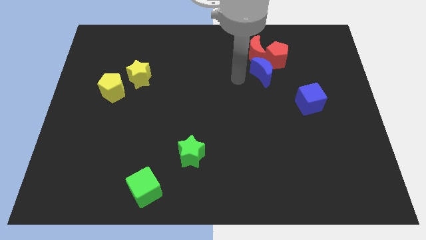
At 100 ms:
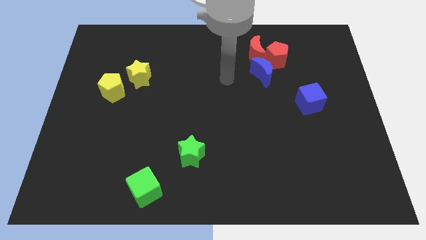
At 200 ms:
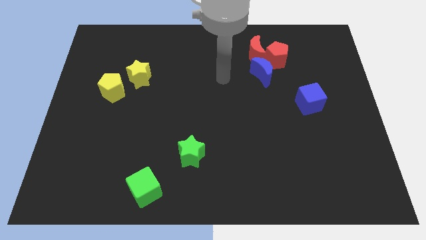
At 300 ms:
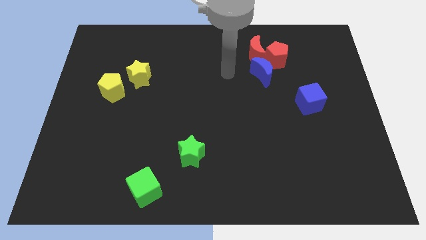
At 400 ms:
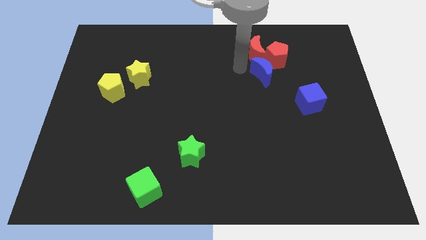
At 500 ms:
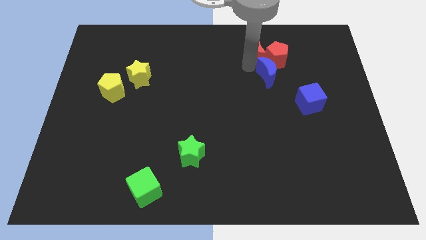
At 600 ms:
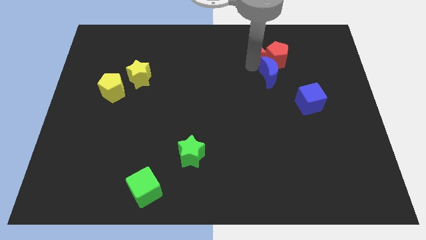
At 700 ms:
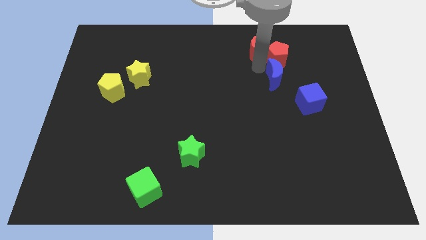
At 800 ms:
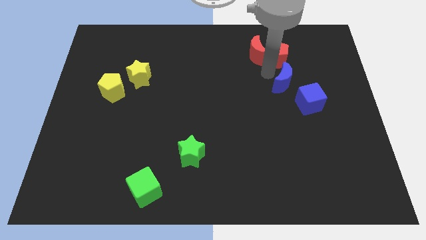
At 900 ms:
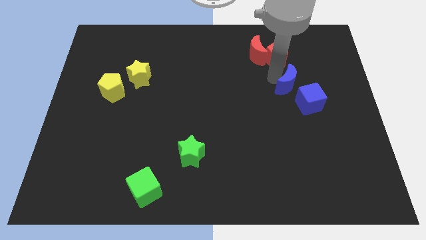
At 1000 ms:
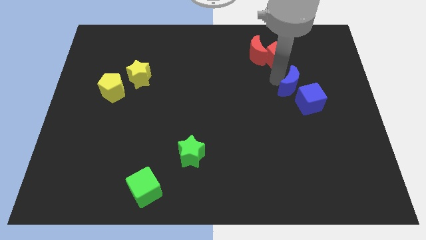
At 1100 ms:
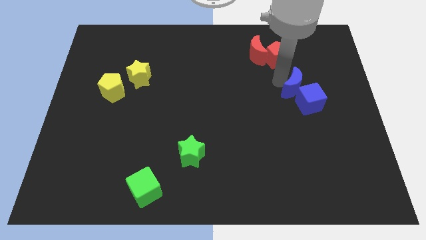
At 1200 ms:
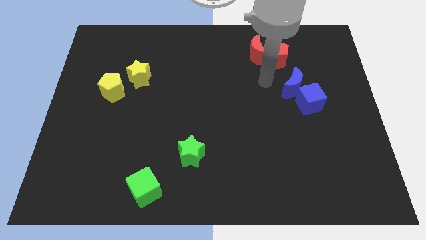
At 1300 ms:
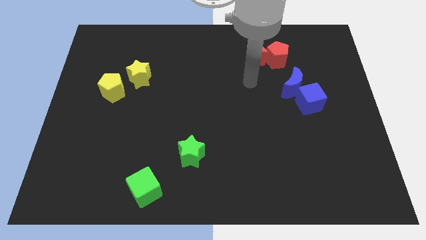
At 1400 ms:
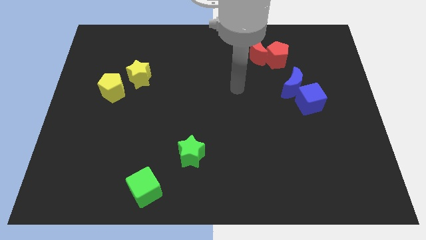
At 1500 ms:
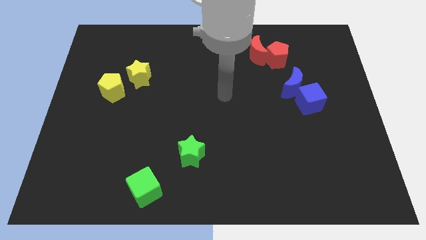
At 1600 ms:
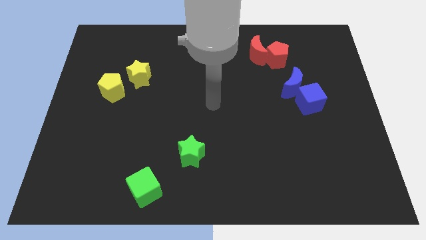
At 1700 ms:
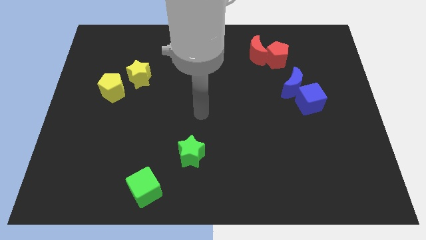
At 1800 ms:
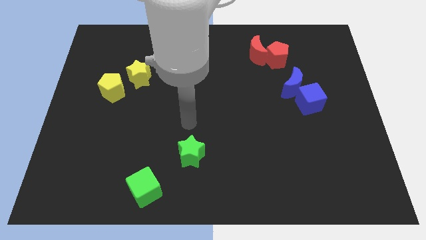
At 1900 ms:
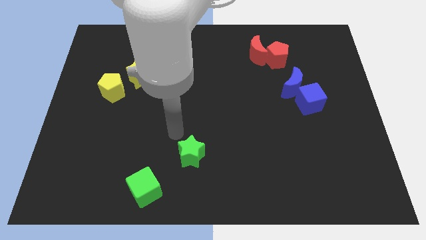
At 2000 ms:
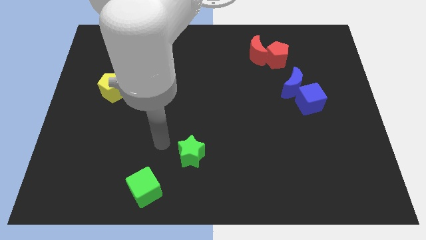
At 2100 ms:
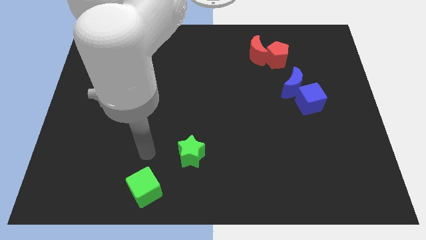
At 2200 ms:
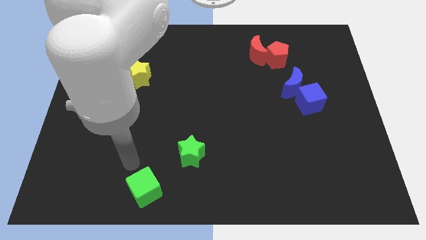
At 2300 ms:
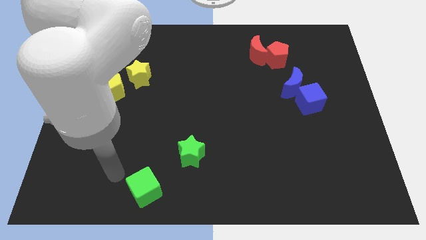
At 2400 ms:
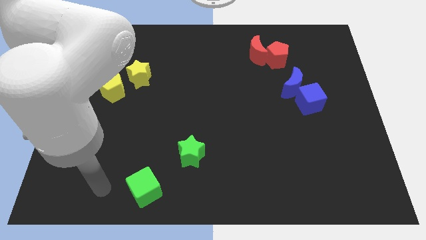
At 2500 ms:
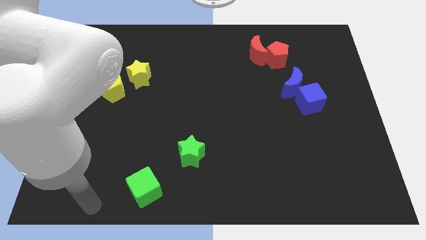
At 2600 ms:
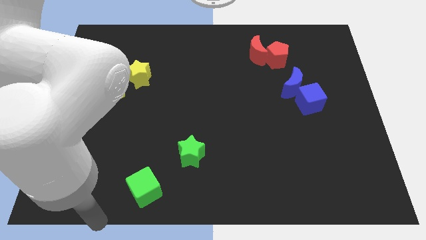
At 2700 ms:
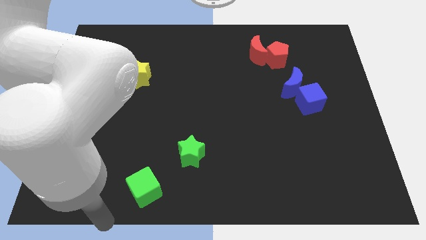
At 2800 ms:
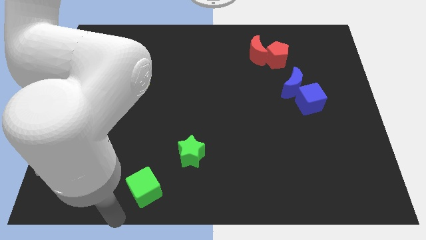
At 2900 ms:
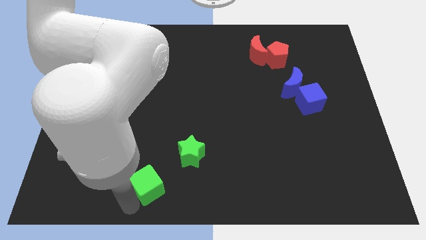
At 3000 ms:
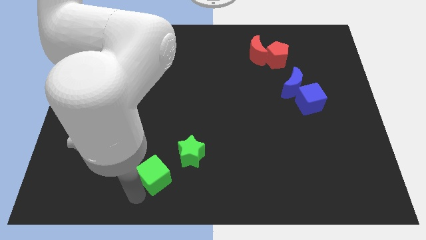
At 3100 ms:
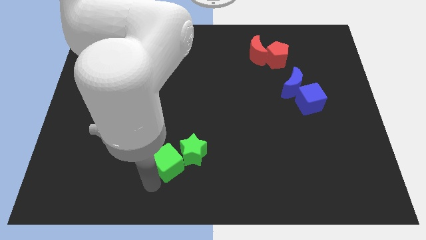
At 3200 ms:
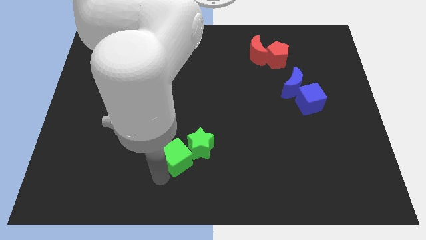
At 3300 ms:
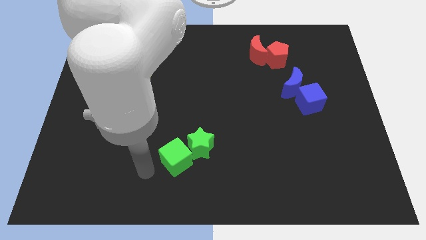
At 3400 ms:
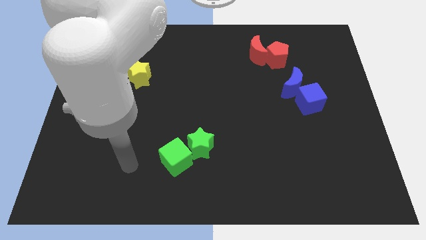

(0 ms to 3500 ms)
group up the blue blocks and green blocks separately

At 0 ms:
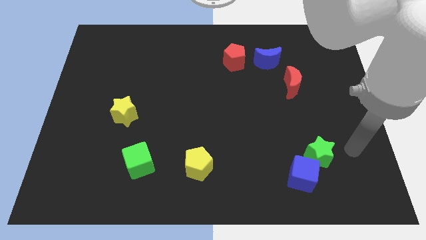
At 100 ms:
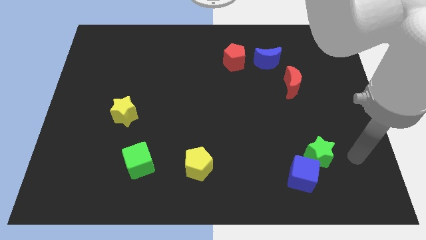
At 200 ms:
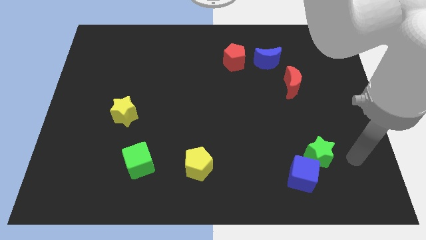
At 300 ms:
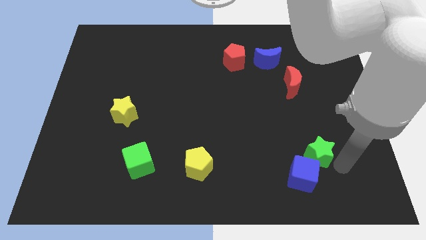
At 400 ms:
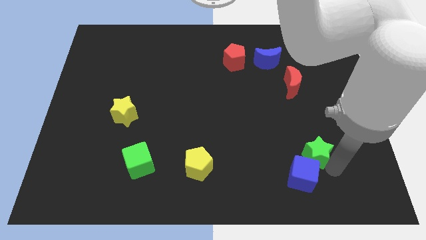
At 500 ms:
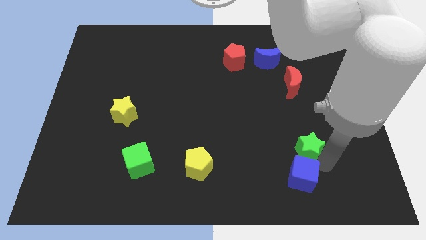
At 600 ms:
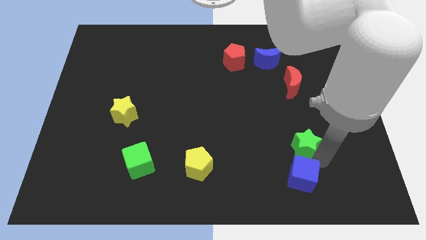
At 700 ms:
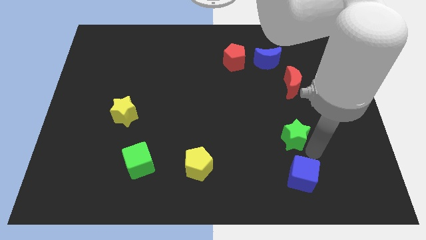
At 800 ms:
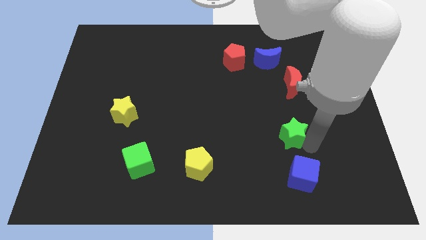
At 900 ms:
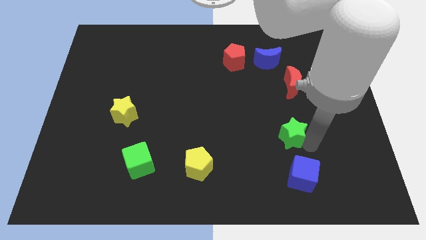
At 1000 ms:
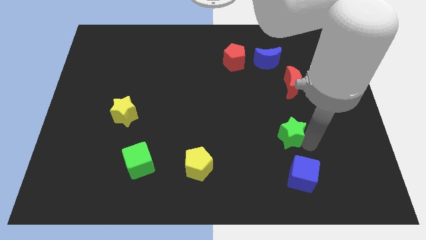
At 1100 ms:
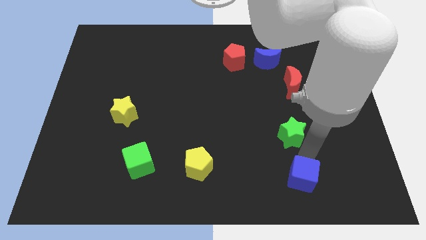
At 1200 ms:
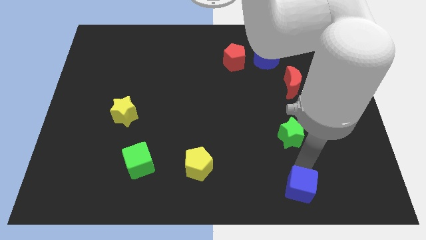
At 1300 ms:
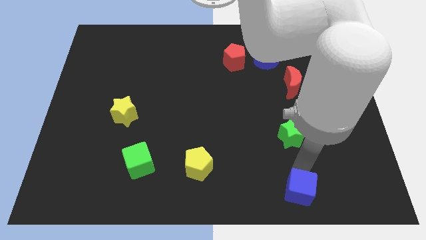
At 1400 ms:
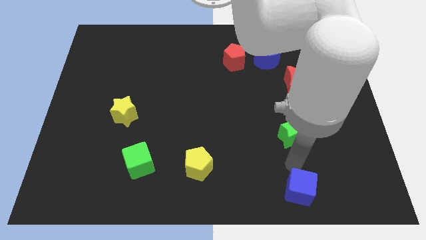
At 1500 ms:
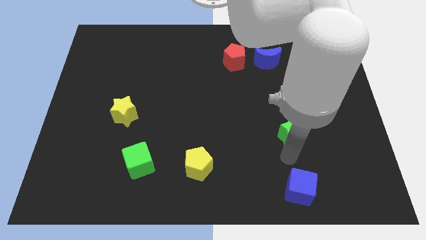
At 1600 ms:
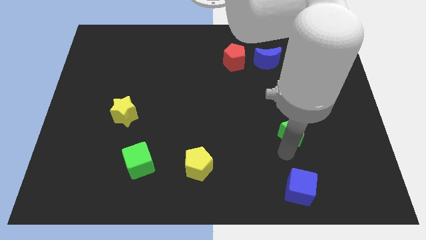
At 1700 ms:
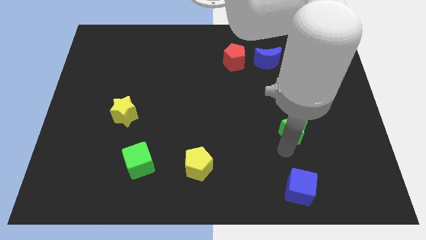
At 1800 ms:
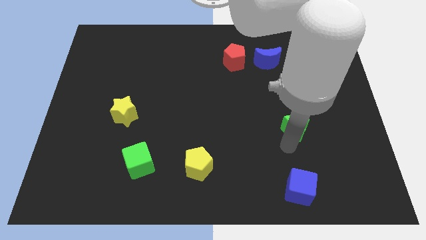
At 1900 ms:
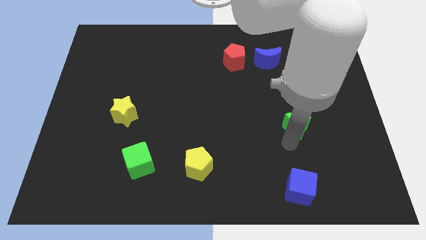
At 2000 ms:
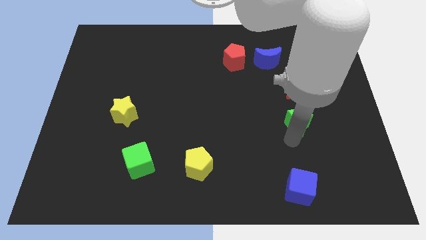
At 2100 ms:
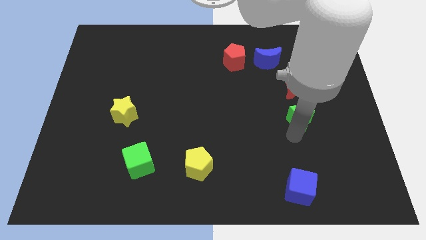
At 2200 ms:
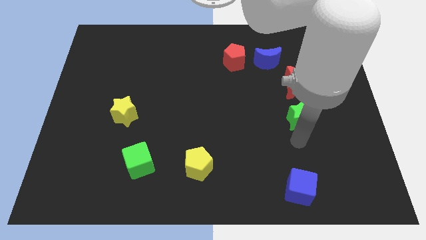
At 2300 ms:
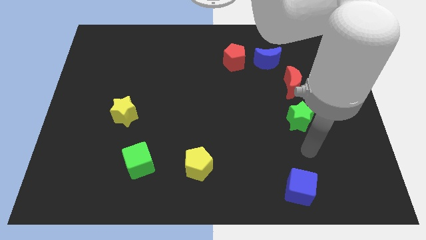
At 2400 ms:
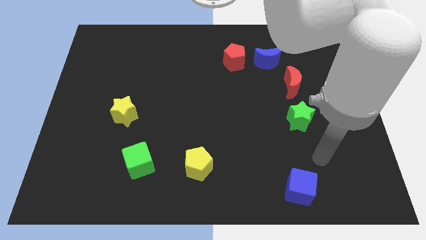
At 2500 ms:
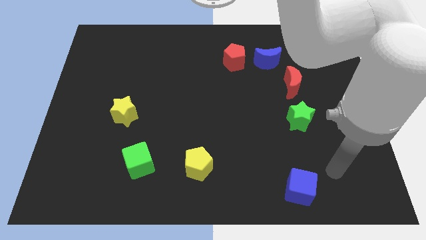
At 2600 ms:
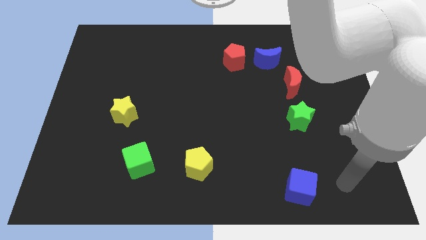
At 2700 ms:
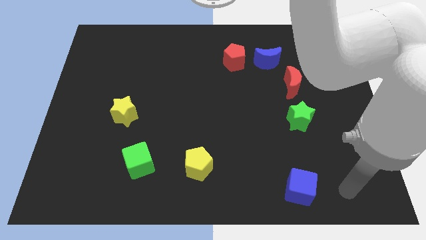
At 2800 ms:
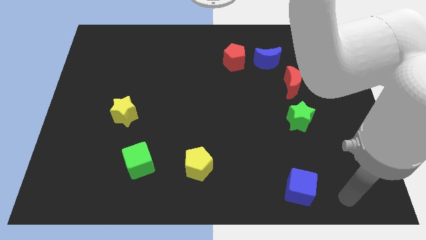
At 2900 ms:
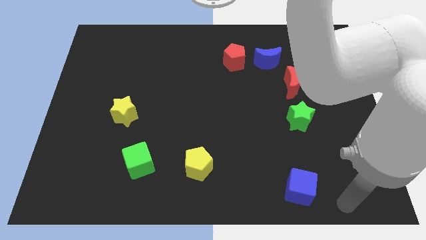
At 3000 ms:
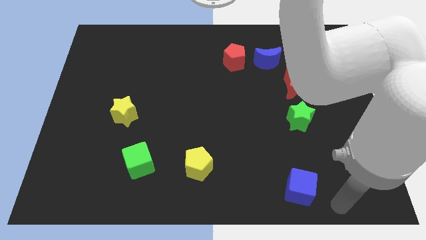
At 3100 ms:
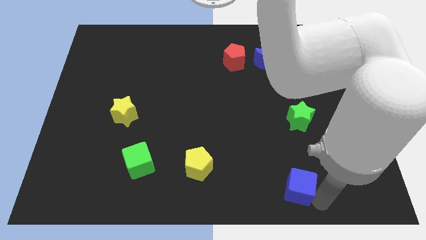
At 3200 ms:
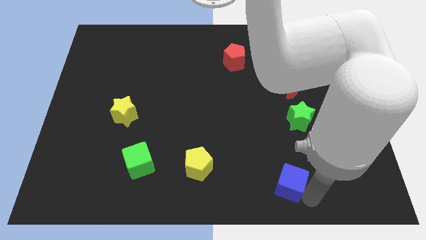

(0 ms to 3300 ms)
push the green star away from the blue cube

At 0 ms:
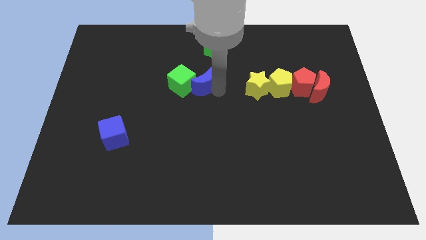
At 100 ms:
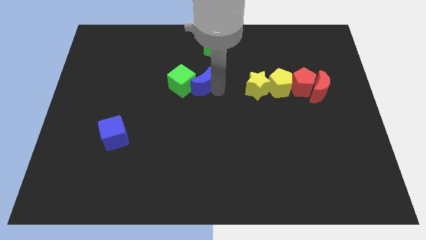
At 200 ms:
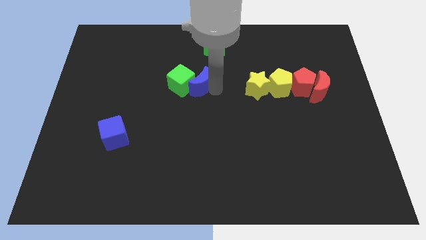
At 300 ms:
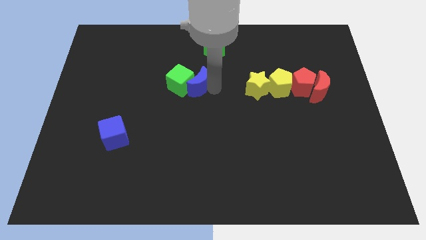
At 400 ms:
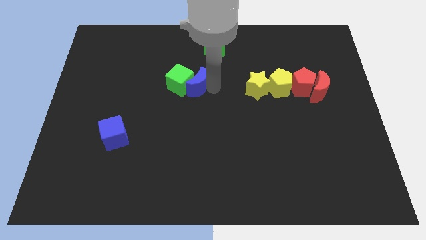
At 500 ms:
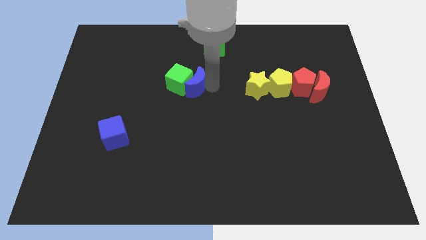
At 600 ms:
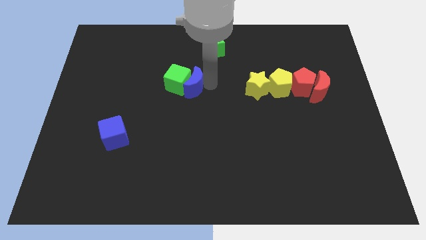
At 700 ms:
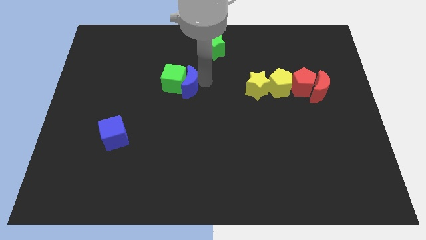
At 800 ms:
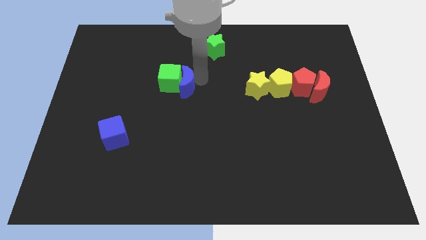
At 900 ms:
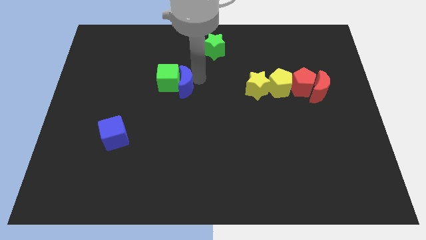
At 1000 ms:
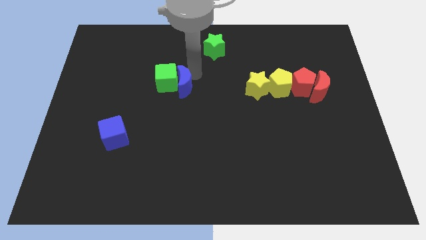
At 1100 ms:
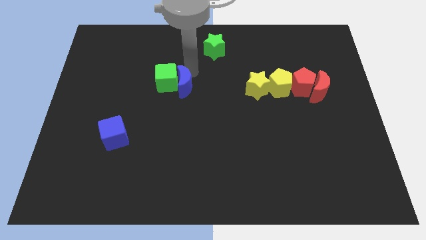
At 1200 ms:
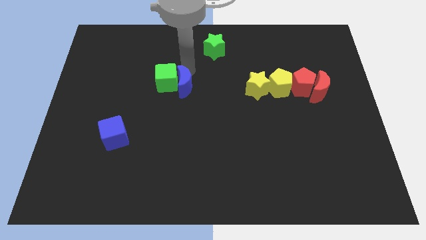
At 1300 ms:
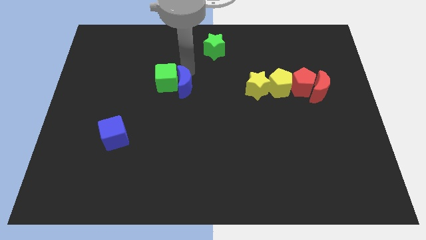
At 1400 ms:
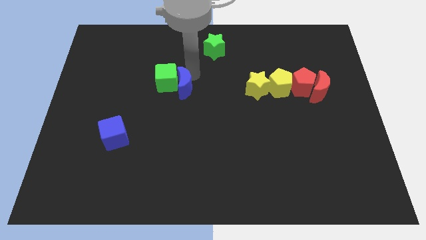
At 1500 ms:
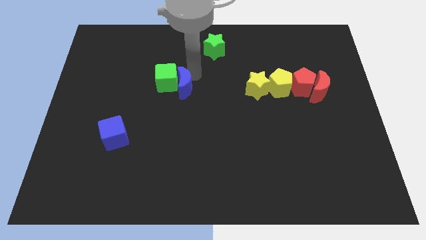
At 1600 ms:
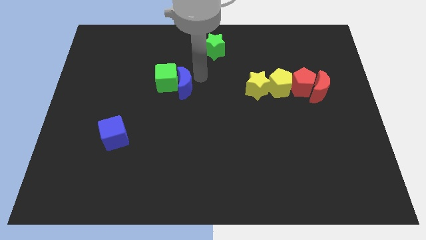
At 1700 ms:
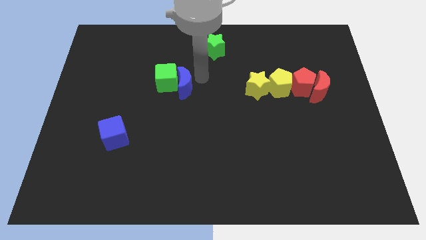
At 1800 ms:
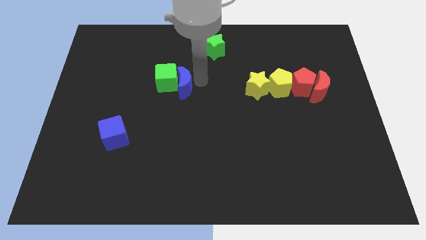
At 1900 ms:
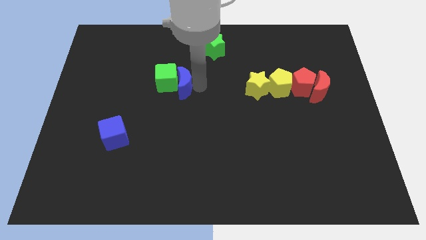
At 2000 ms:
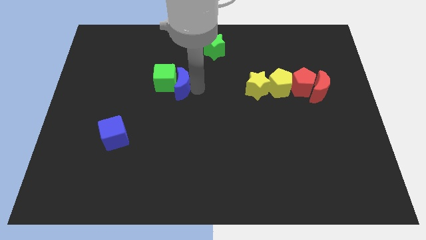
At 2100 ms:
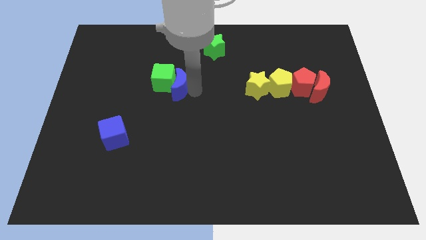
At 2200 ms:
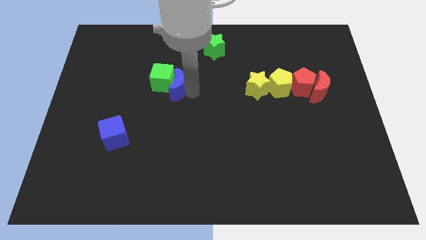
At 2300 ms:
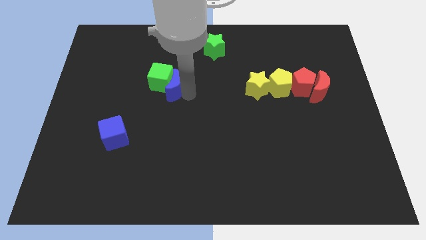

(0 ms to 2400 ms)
move the blue moon close to the green cube to the left
